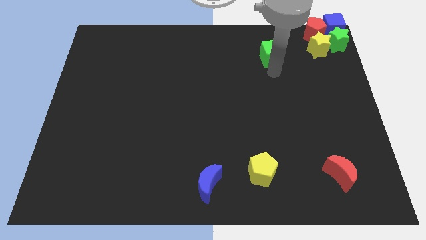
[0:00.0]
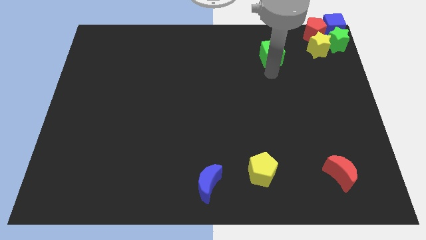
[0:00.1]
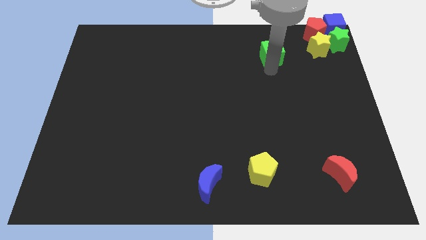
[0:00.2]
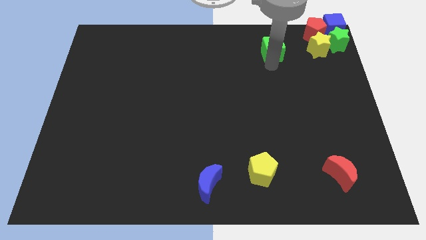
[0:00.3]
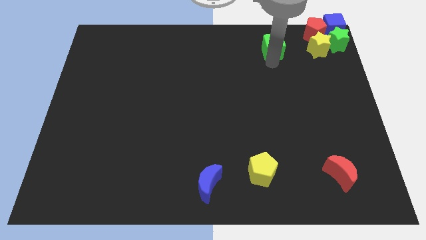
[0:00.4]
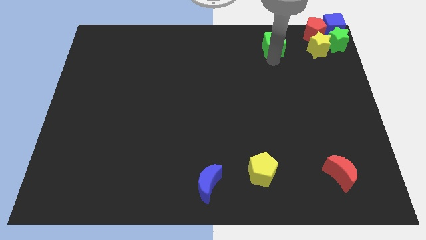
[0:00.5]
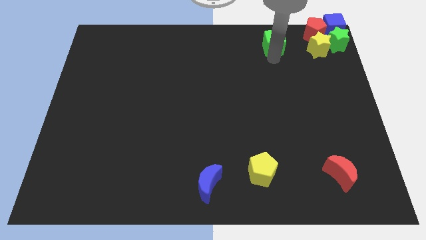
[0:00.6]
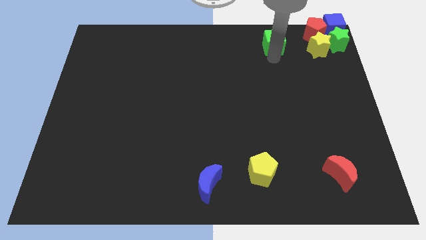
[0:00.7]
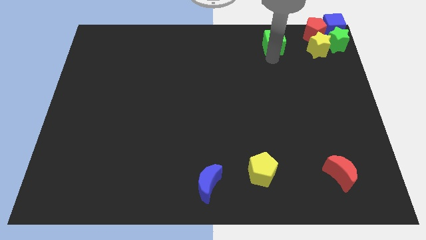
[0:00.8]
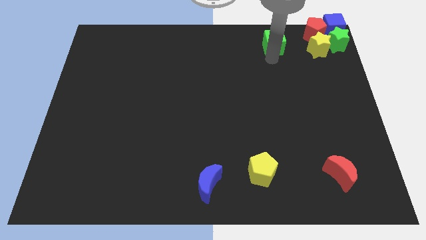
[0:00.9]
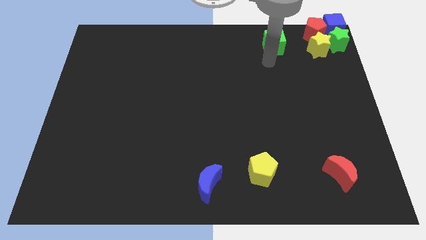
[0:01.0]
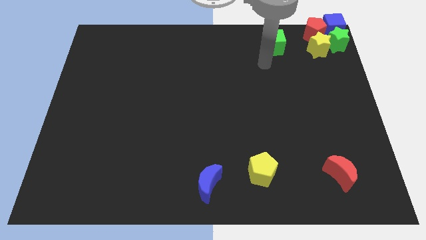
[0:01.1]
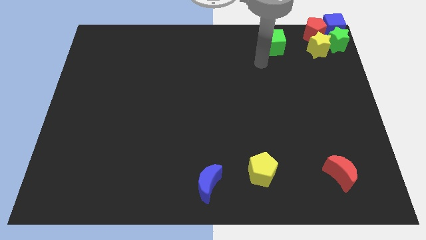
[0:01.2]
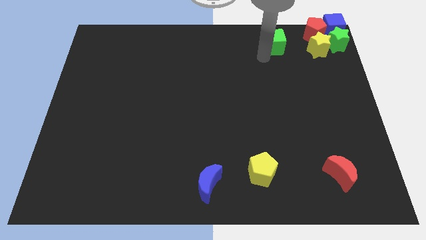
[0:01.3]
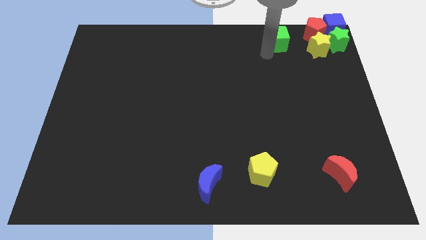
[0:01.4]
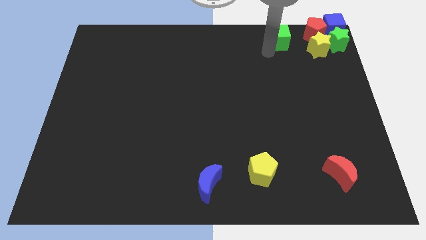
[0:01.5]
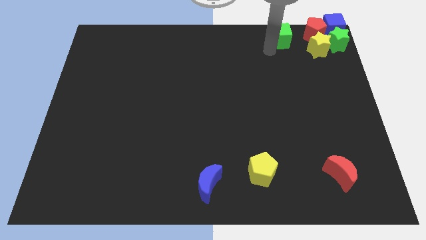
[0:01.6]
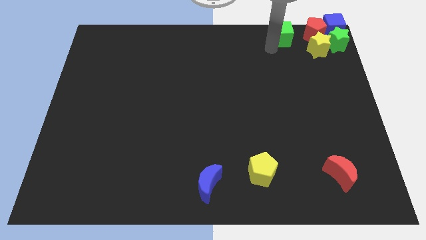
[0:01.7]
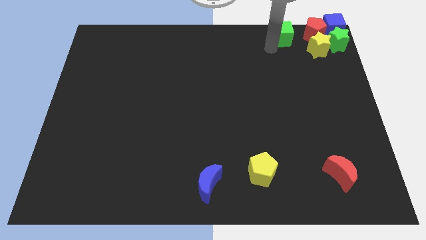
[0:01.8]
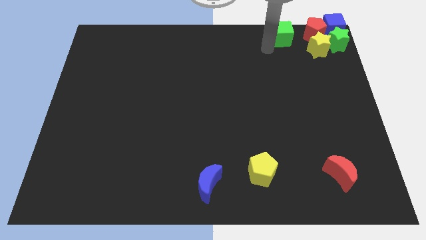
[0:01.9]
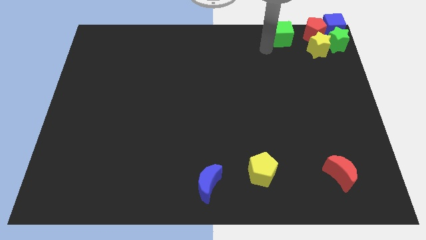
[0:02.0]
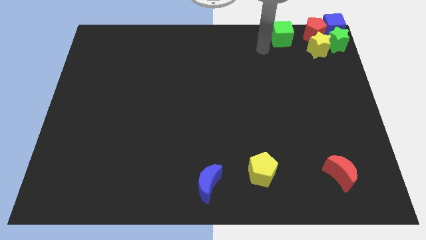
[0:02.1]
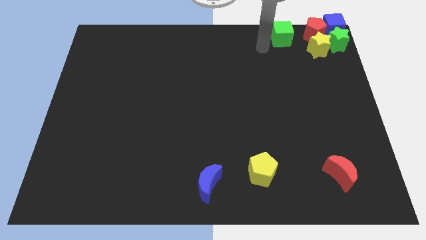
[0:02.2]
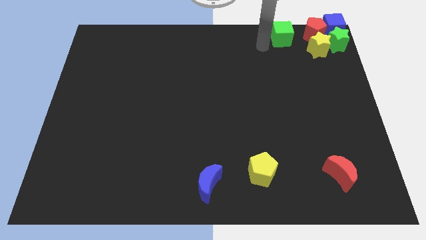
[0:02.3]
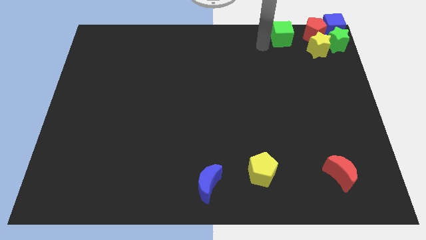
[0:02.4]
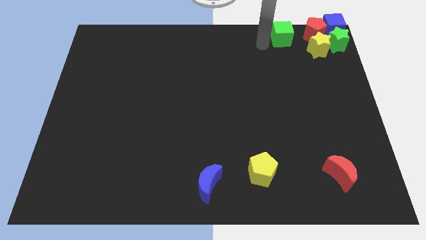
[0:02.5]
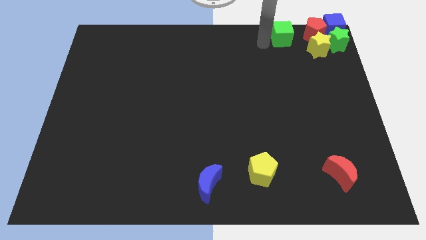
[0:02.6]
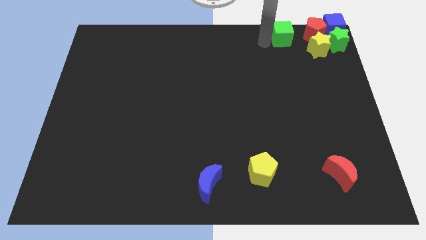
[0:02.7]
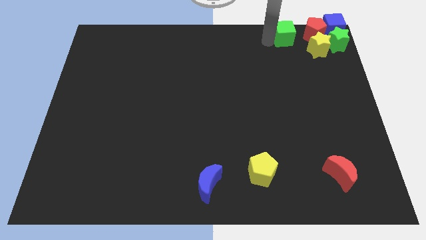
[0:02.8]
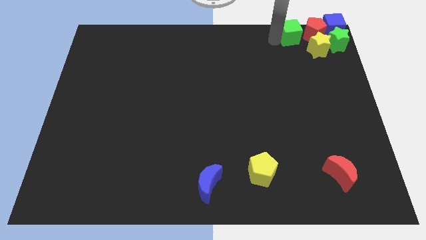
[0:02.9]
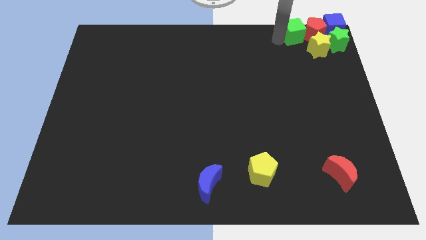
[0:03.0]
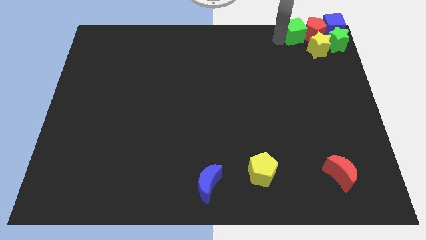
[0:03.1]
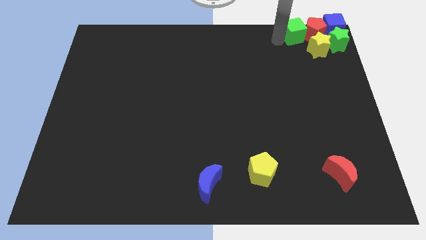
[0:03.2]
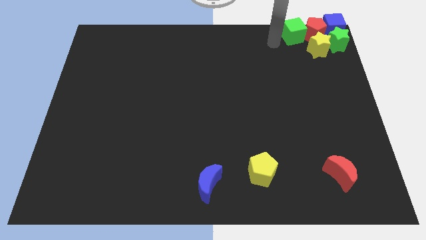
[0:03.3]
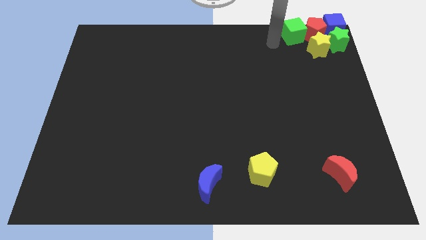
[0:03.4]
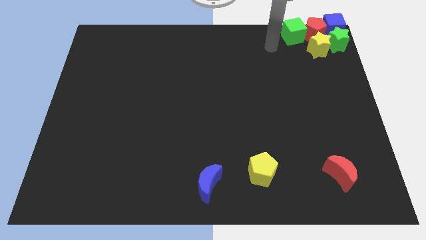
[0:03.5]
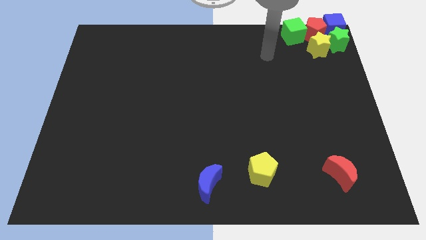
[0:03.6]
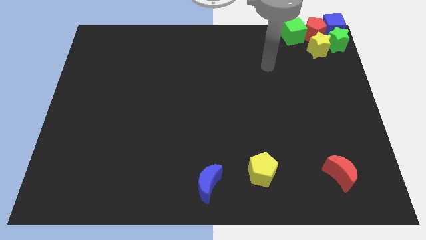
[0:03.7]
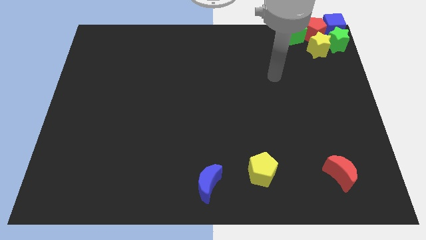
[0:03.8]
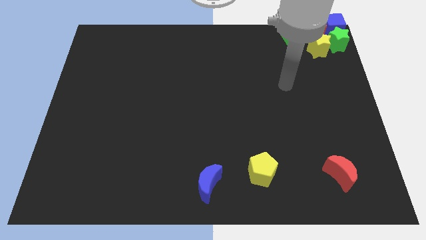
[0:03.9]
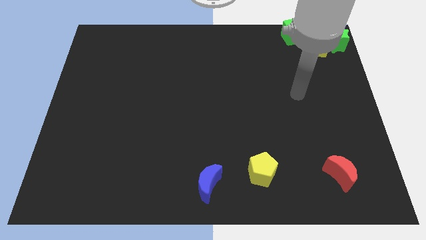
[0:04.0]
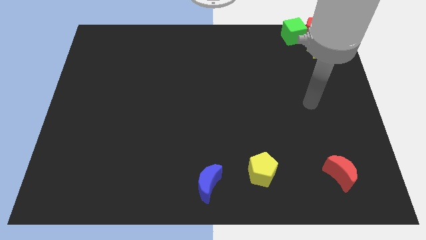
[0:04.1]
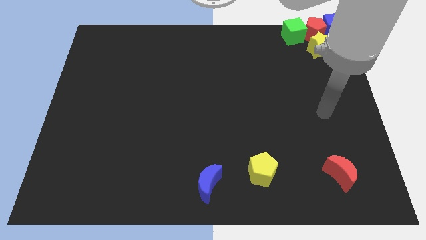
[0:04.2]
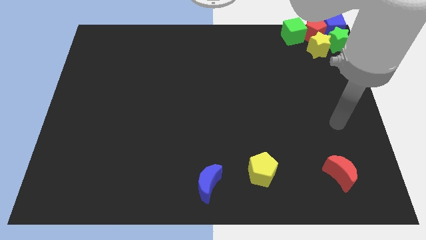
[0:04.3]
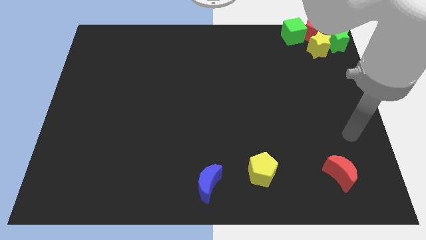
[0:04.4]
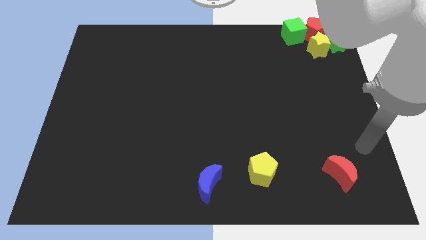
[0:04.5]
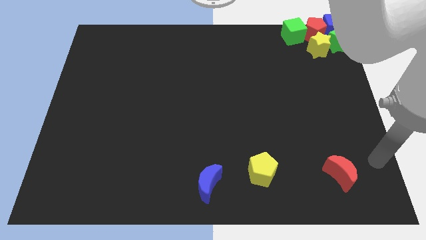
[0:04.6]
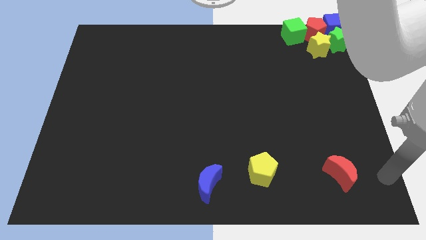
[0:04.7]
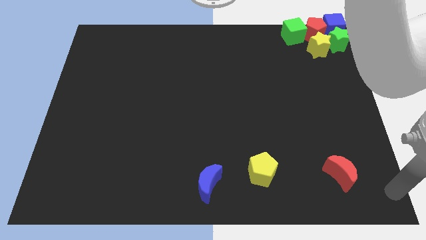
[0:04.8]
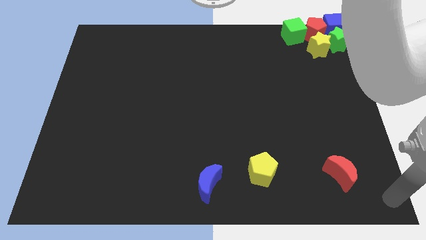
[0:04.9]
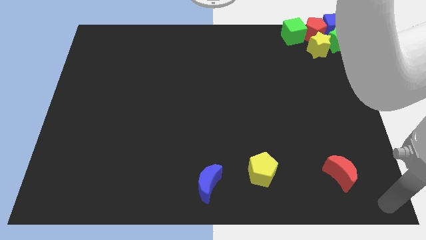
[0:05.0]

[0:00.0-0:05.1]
push the green cube into the red pentagon

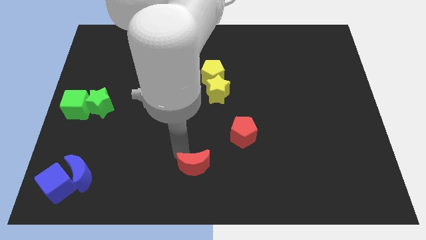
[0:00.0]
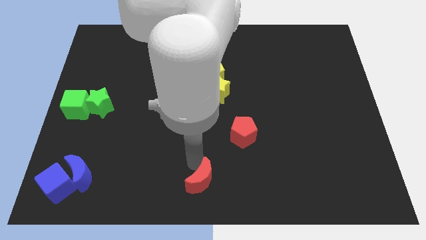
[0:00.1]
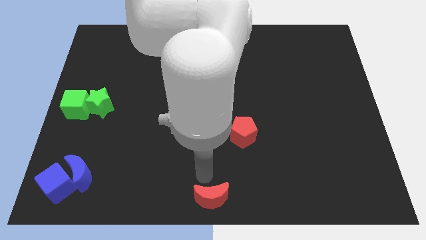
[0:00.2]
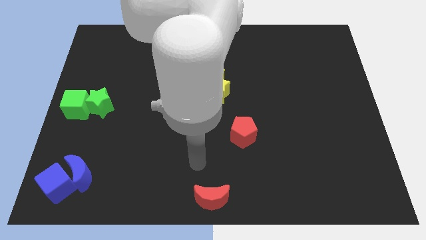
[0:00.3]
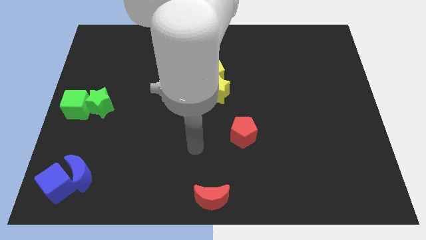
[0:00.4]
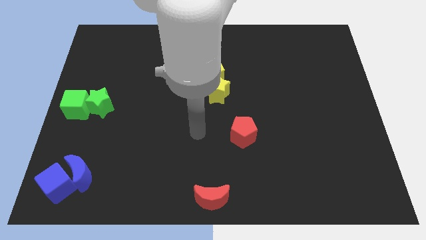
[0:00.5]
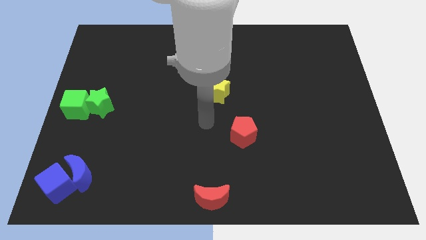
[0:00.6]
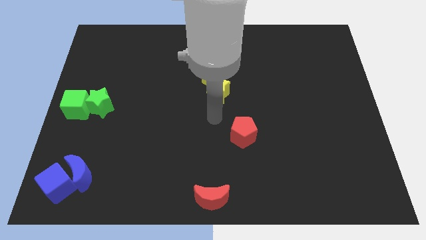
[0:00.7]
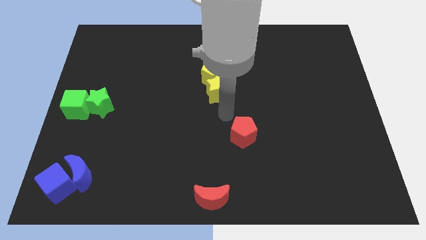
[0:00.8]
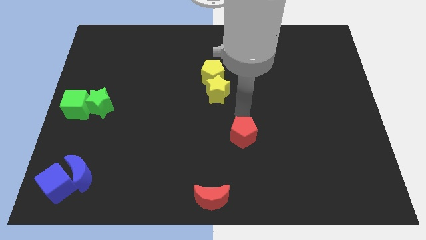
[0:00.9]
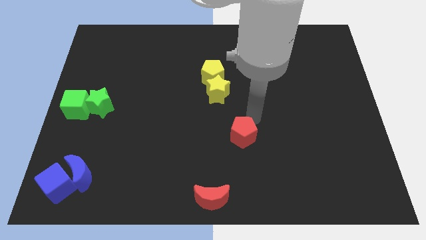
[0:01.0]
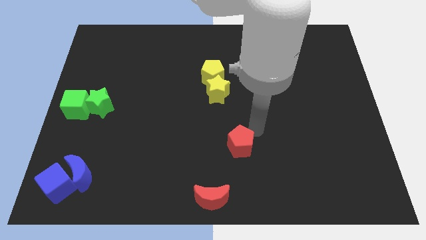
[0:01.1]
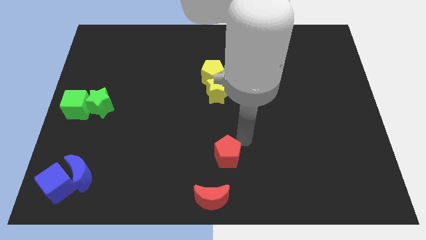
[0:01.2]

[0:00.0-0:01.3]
move the red crescent to the bottom center of the board

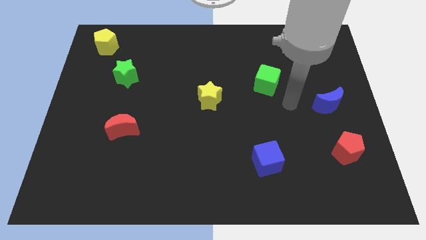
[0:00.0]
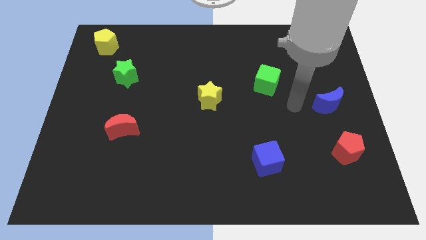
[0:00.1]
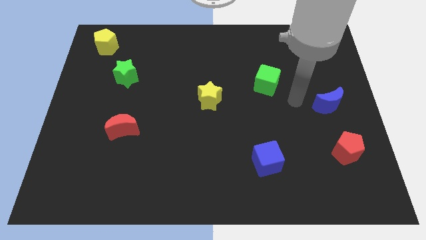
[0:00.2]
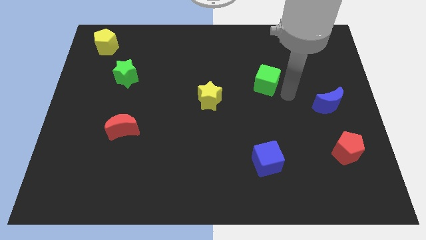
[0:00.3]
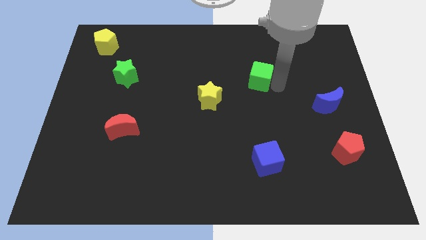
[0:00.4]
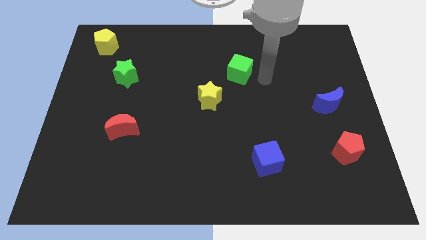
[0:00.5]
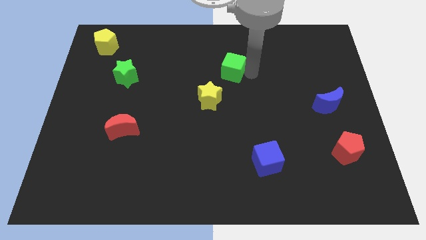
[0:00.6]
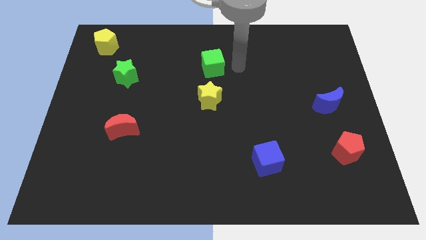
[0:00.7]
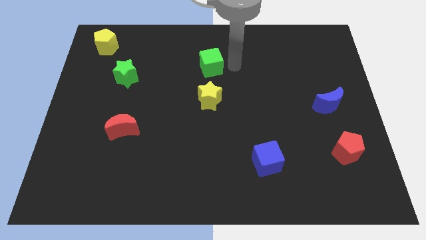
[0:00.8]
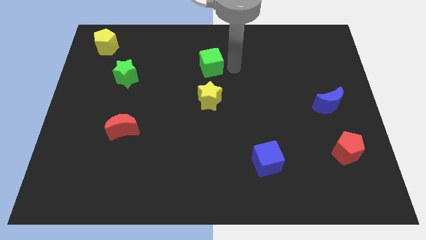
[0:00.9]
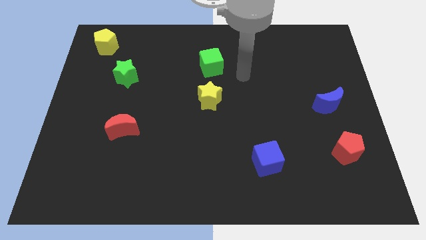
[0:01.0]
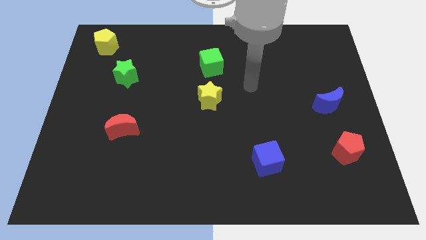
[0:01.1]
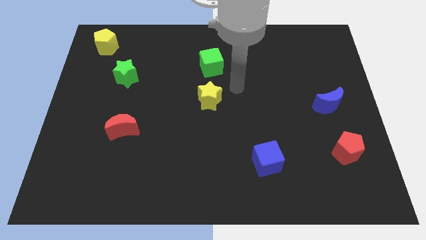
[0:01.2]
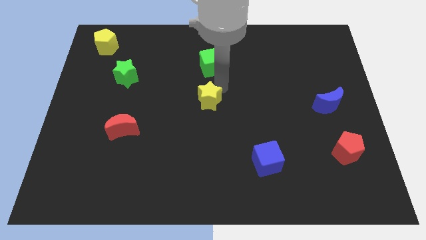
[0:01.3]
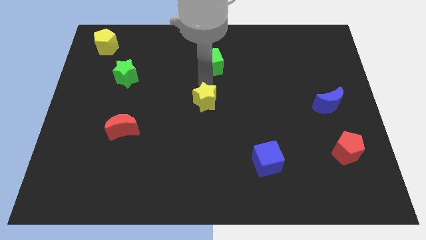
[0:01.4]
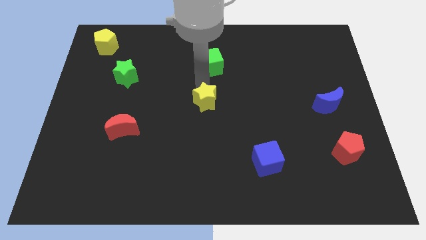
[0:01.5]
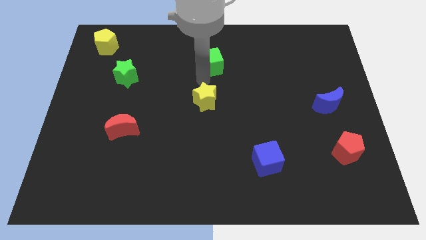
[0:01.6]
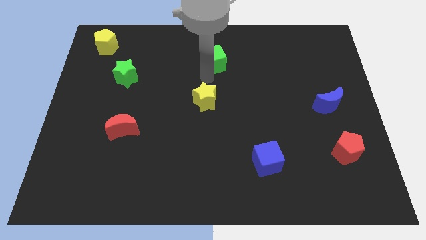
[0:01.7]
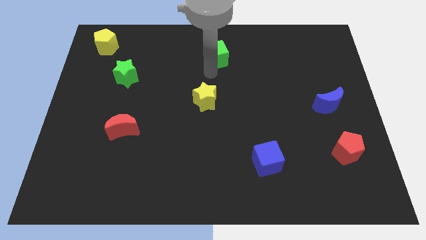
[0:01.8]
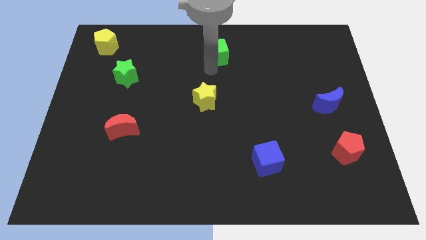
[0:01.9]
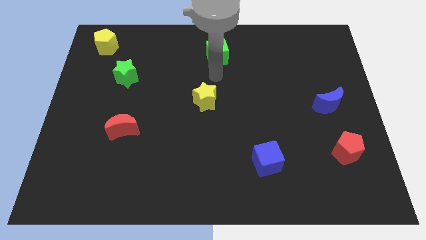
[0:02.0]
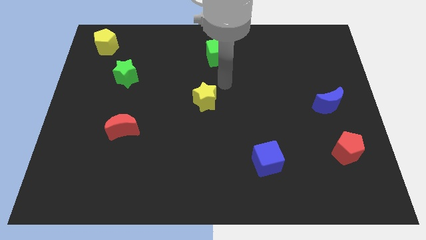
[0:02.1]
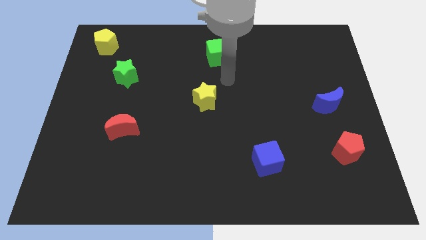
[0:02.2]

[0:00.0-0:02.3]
place the green cube above the yellow star

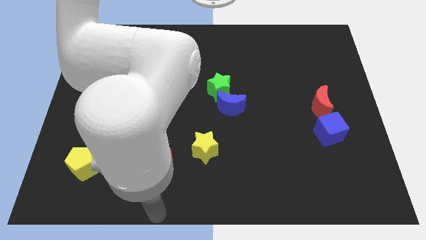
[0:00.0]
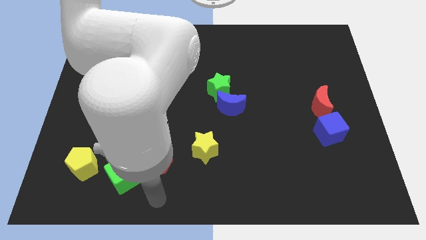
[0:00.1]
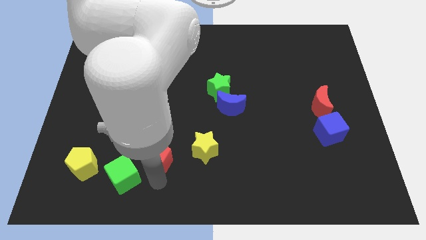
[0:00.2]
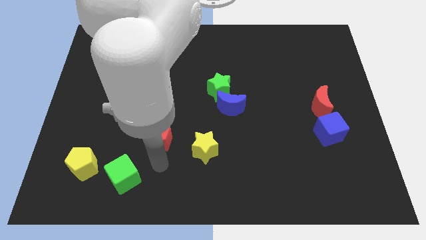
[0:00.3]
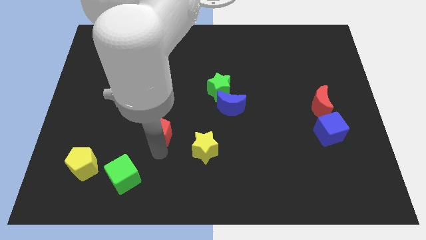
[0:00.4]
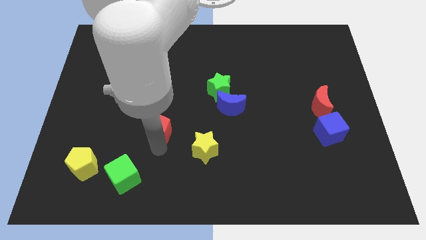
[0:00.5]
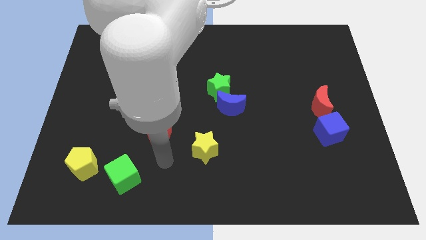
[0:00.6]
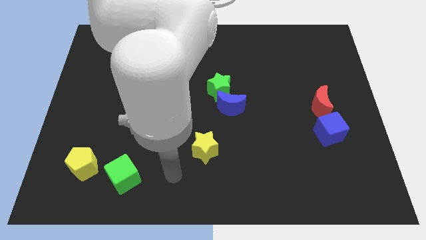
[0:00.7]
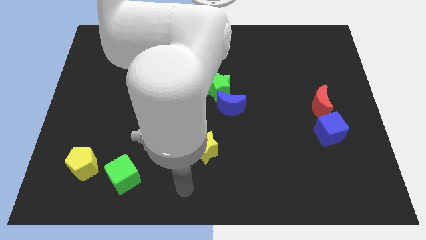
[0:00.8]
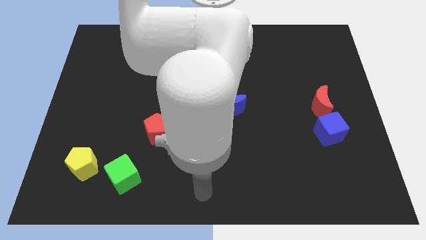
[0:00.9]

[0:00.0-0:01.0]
move the red pentagon to the top of the board
